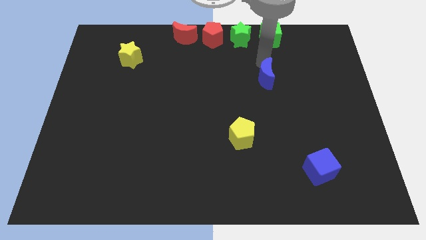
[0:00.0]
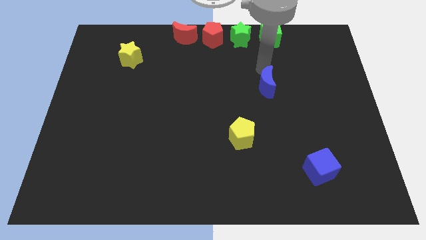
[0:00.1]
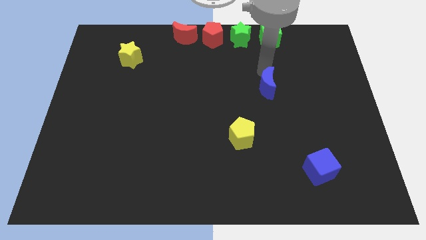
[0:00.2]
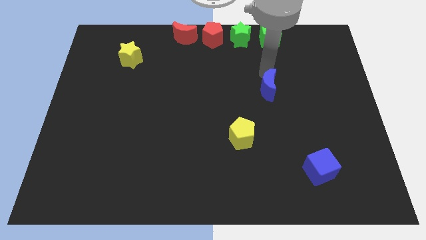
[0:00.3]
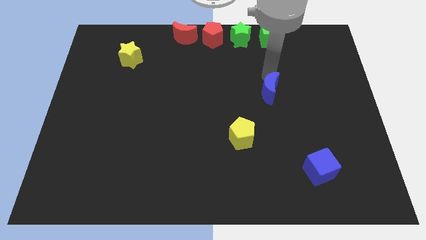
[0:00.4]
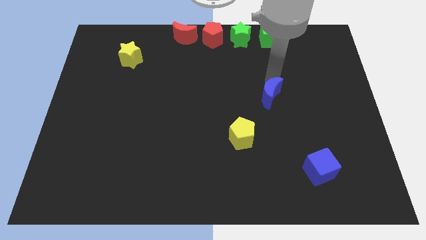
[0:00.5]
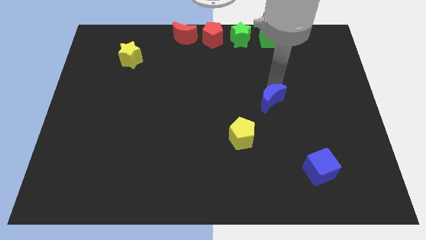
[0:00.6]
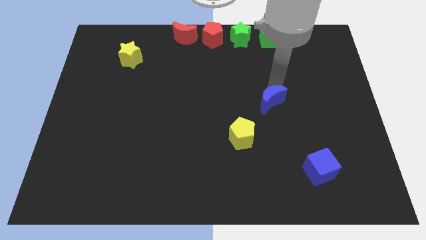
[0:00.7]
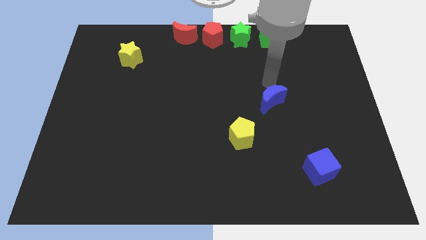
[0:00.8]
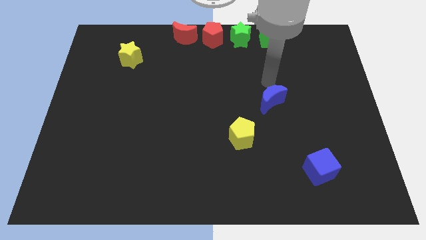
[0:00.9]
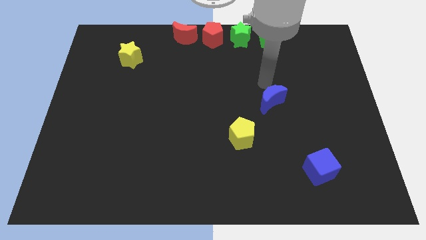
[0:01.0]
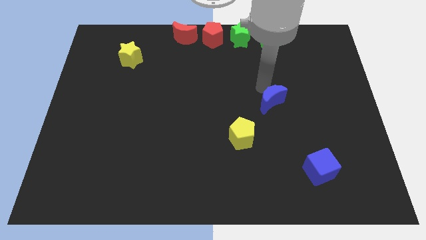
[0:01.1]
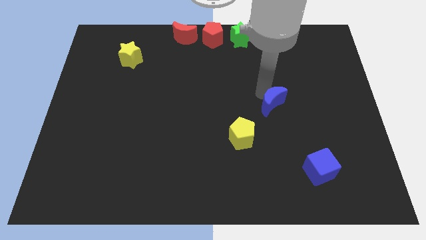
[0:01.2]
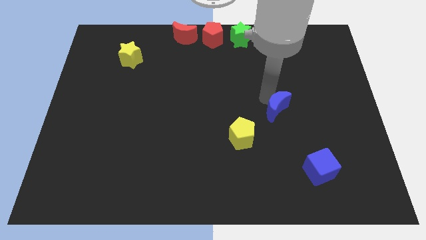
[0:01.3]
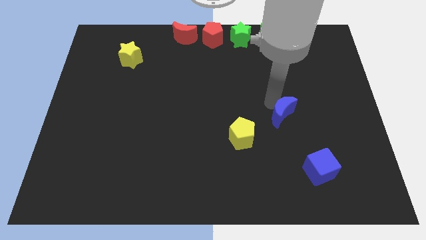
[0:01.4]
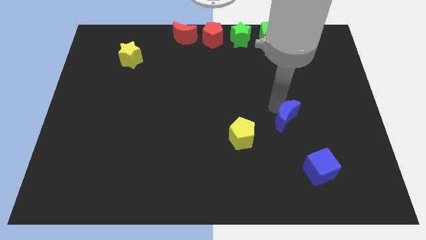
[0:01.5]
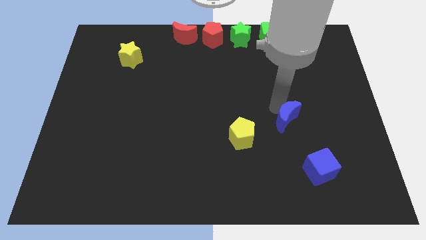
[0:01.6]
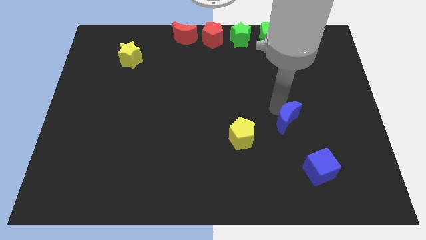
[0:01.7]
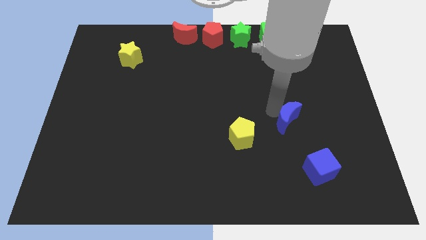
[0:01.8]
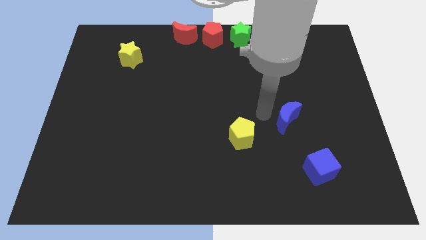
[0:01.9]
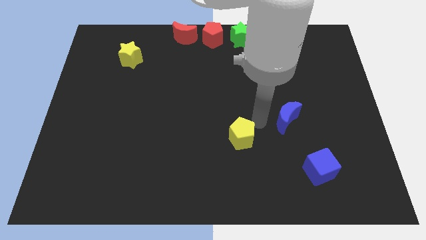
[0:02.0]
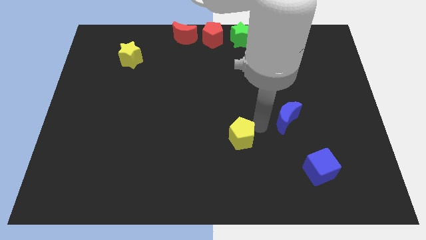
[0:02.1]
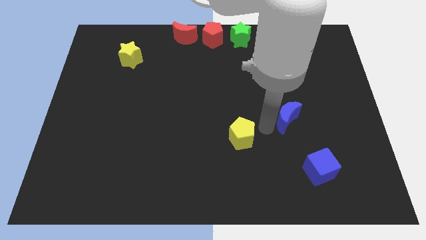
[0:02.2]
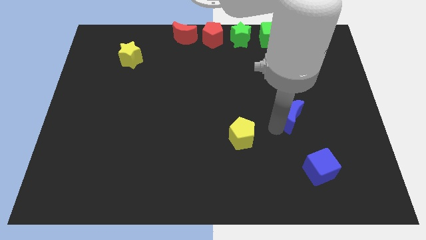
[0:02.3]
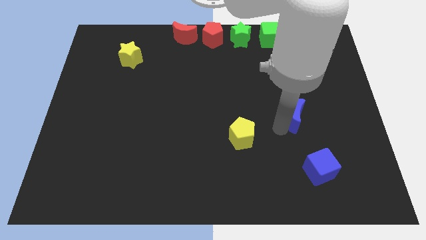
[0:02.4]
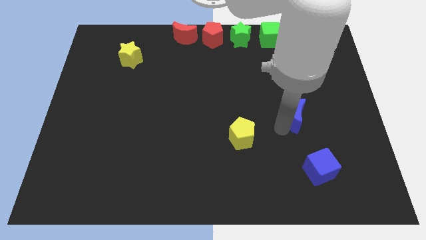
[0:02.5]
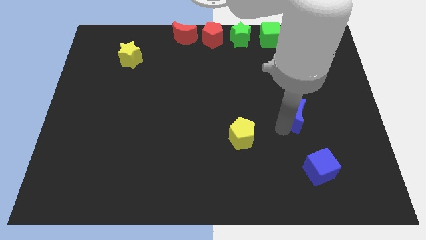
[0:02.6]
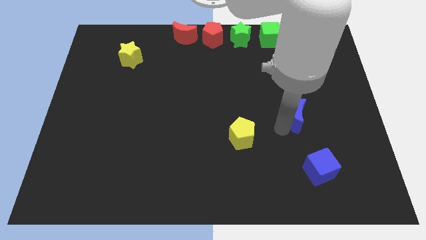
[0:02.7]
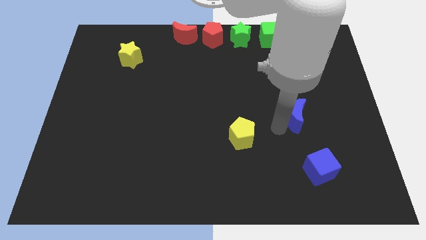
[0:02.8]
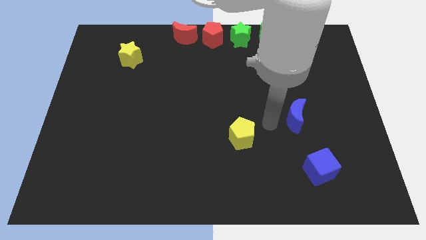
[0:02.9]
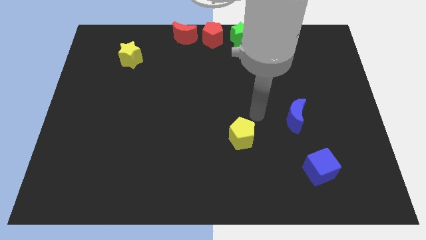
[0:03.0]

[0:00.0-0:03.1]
move blue crescent towards blue cube

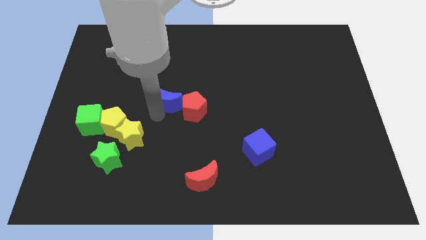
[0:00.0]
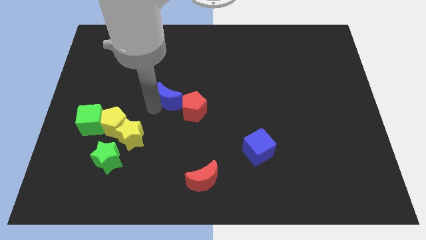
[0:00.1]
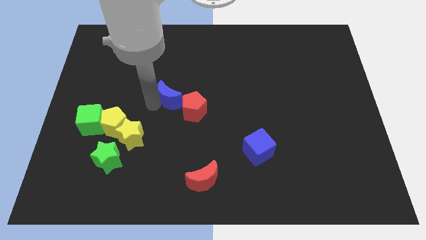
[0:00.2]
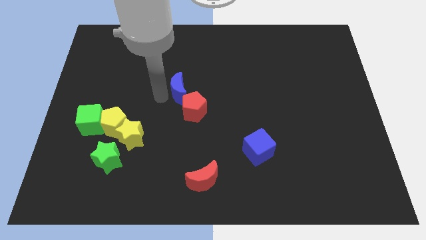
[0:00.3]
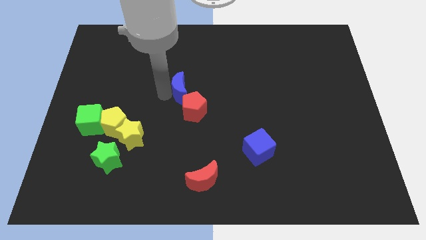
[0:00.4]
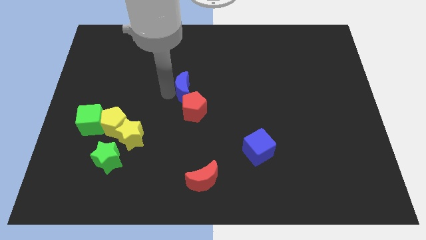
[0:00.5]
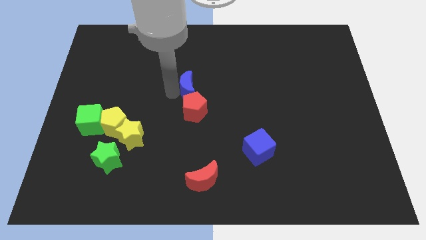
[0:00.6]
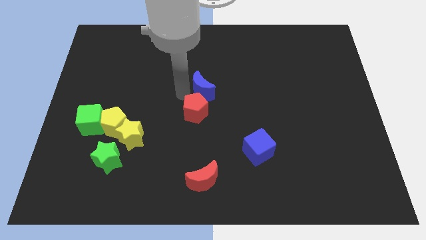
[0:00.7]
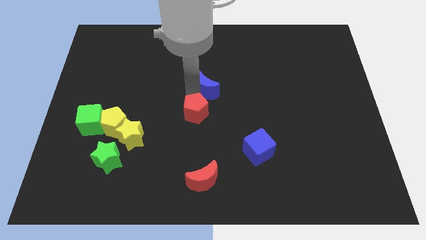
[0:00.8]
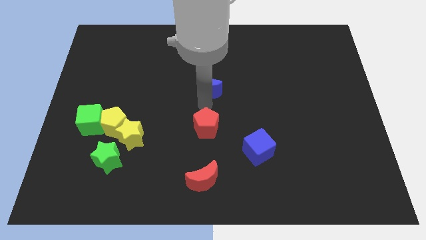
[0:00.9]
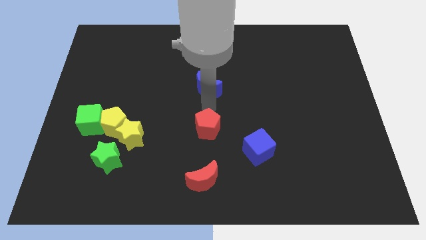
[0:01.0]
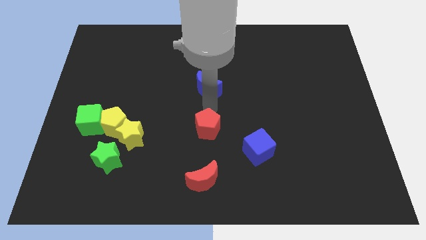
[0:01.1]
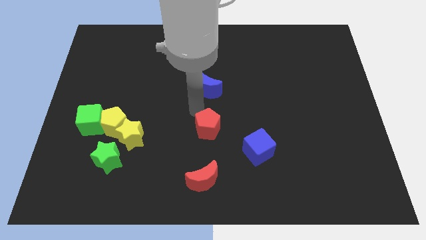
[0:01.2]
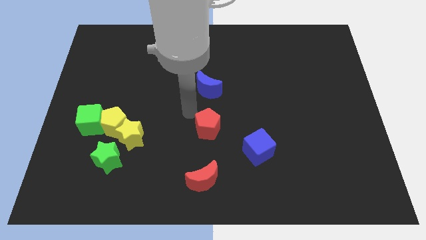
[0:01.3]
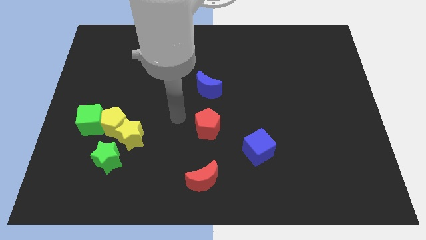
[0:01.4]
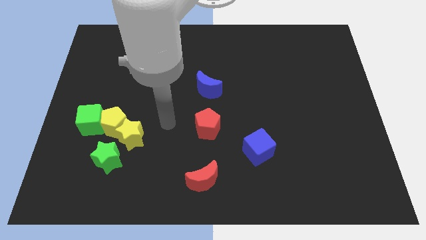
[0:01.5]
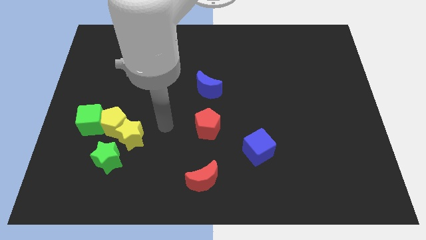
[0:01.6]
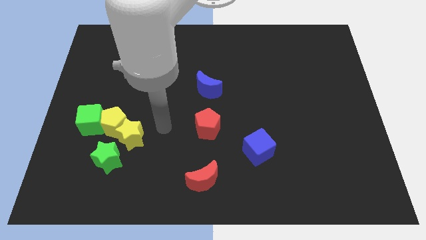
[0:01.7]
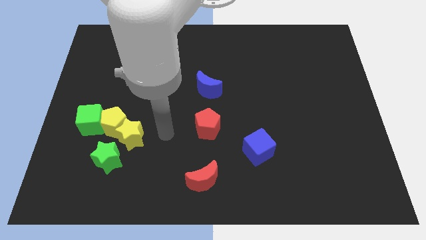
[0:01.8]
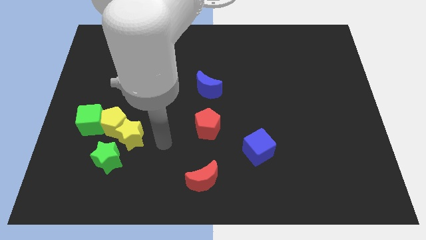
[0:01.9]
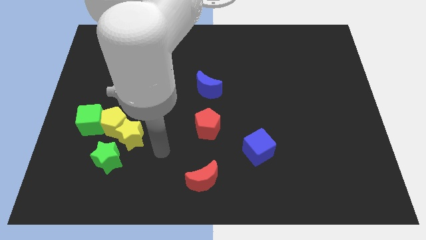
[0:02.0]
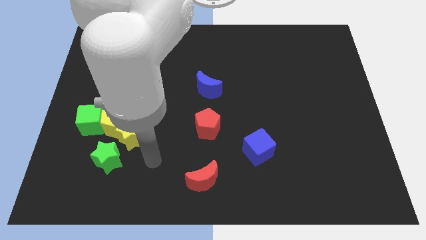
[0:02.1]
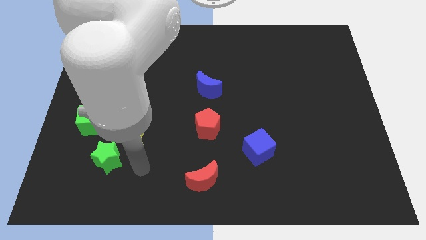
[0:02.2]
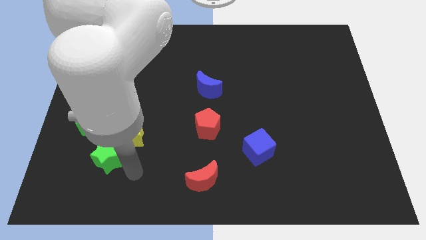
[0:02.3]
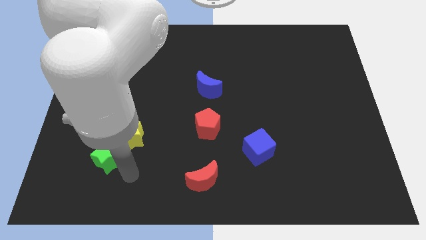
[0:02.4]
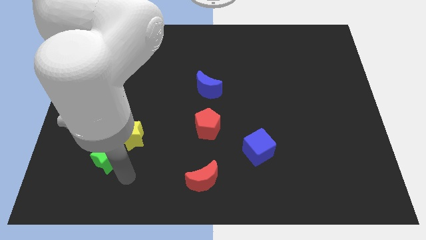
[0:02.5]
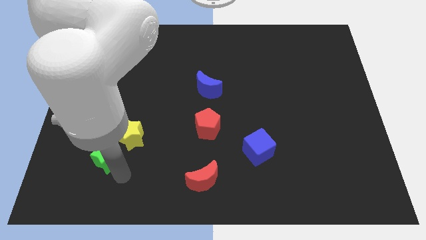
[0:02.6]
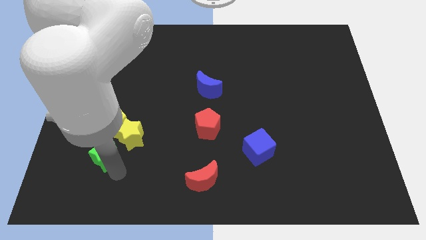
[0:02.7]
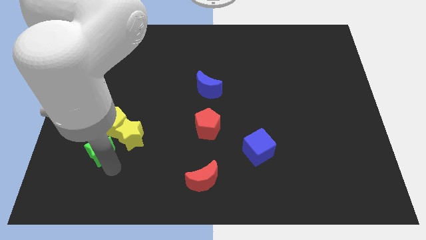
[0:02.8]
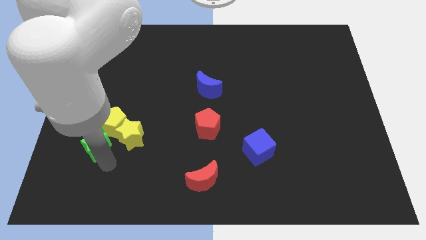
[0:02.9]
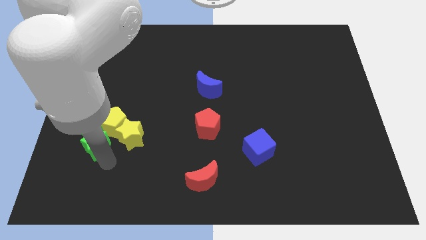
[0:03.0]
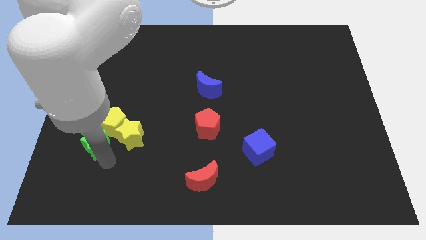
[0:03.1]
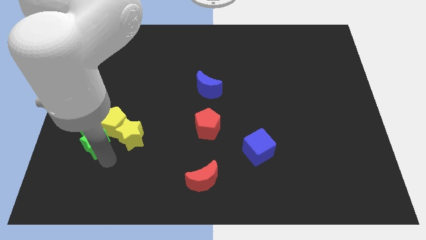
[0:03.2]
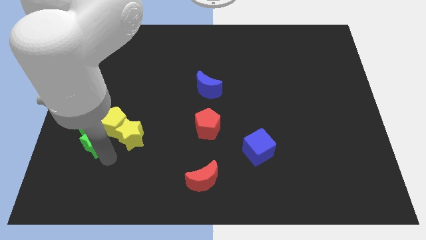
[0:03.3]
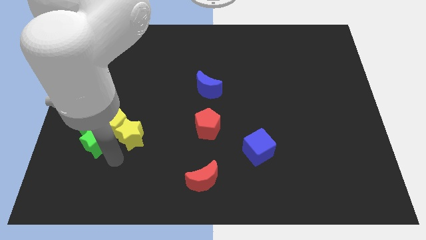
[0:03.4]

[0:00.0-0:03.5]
push the blue moon above the red pentagon

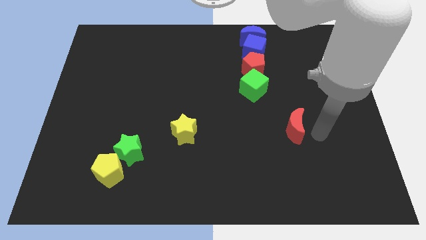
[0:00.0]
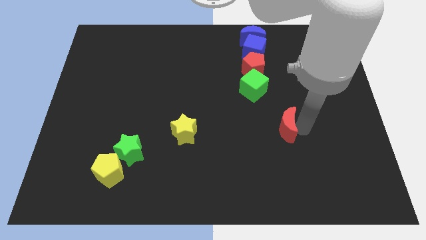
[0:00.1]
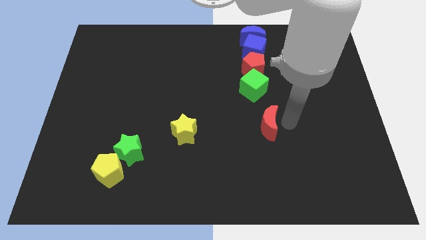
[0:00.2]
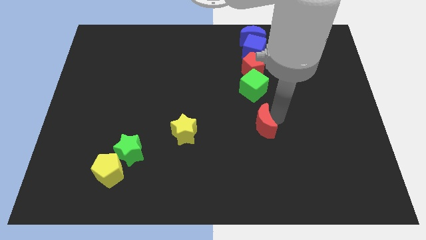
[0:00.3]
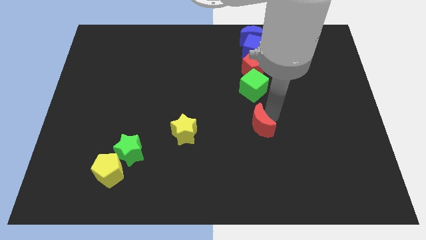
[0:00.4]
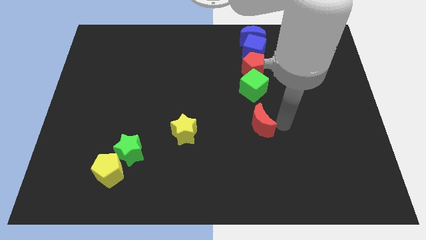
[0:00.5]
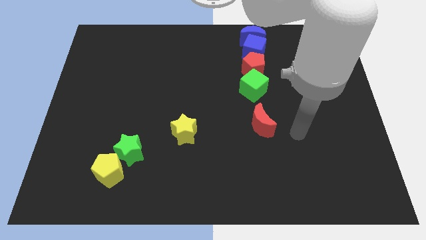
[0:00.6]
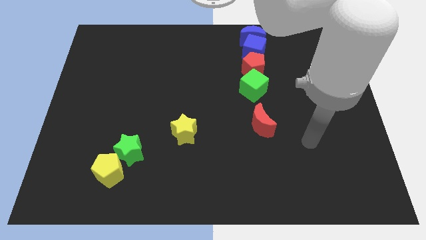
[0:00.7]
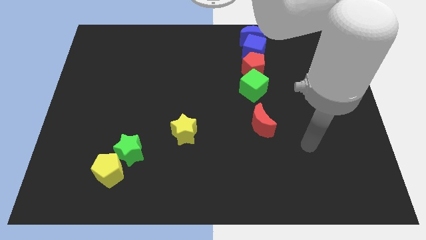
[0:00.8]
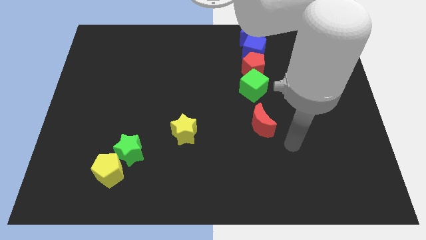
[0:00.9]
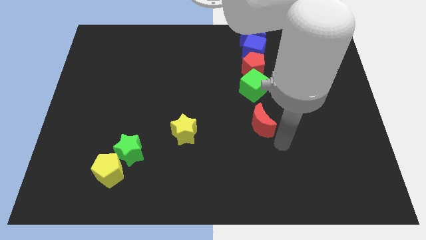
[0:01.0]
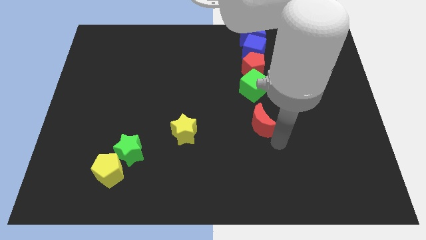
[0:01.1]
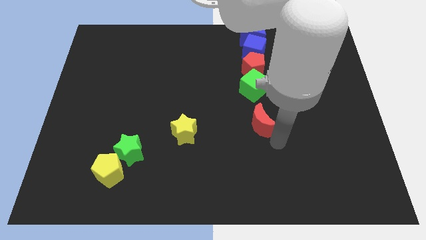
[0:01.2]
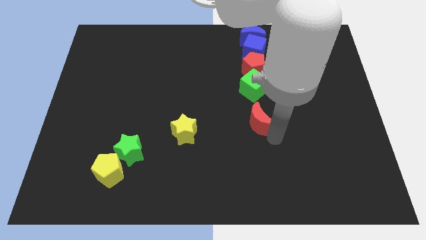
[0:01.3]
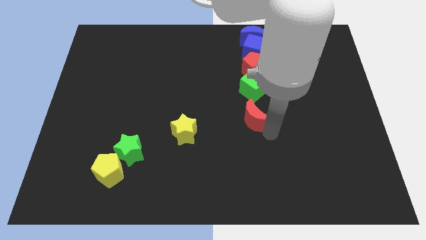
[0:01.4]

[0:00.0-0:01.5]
move the red crescent below the green cube

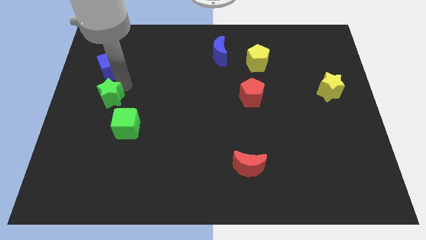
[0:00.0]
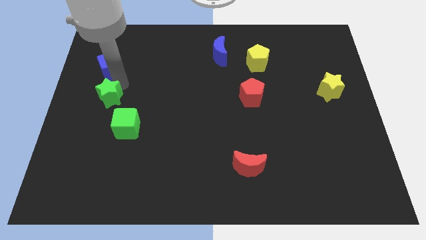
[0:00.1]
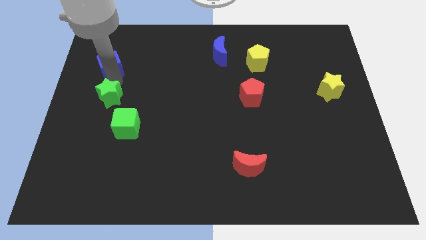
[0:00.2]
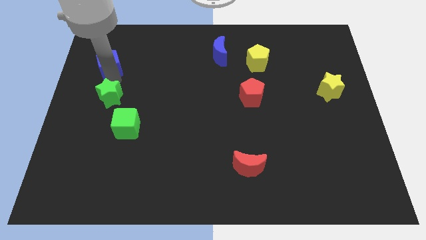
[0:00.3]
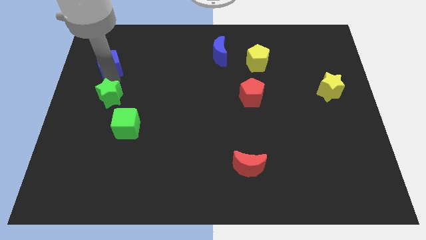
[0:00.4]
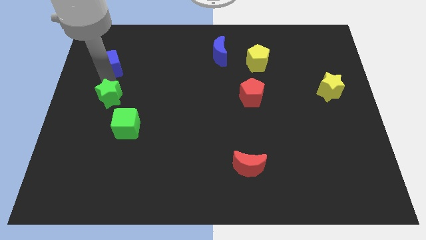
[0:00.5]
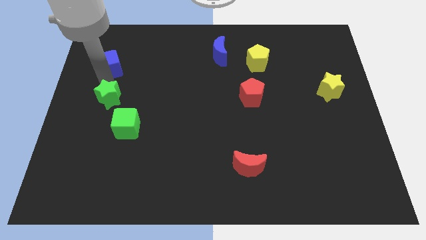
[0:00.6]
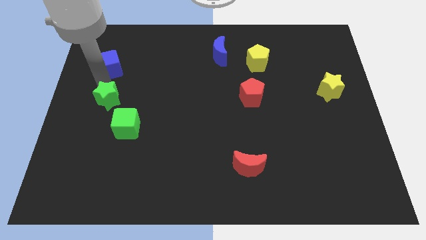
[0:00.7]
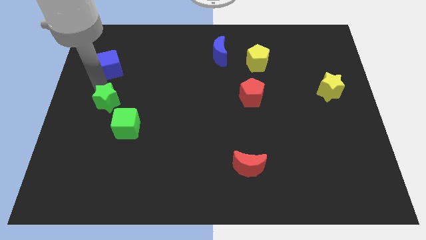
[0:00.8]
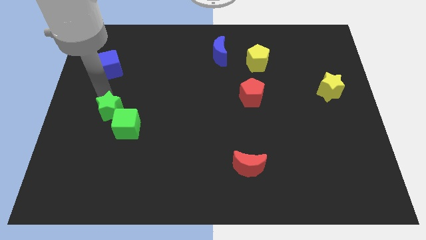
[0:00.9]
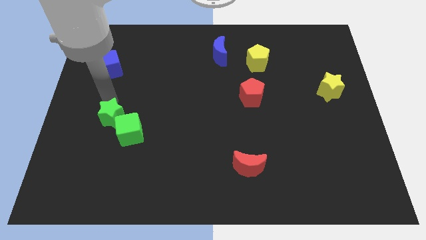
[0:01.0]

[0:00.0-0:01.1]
push green star in to green cube
